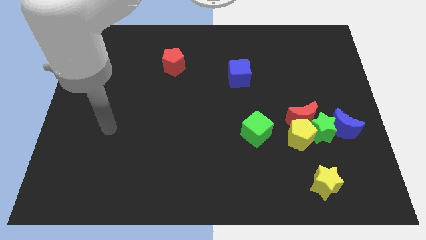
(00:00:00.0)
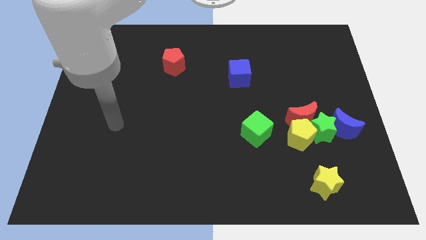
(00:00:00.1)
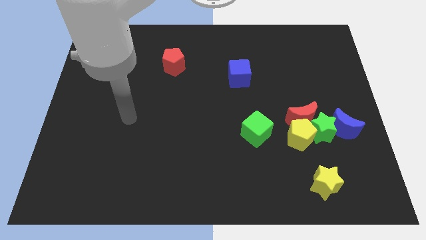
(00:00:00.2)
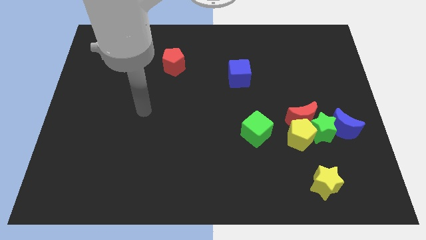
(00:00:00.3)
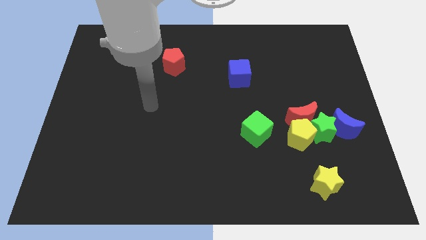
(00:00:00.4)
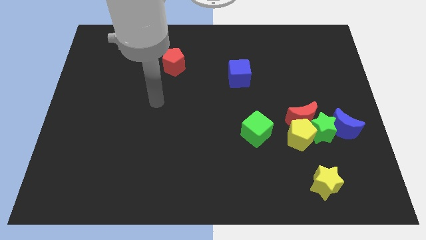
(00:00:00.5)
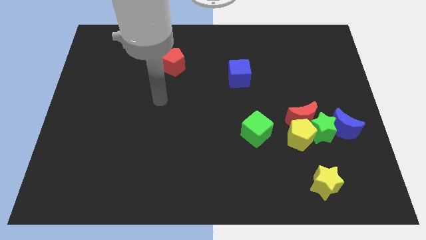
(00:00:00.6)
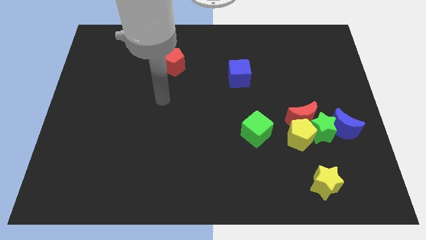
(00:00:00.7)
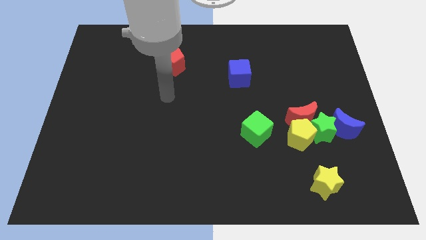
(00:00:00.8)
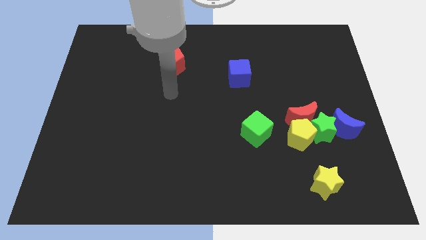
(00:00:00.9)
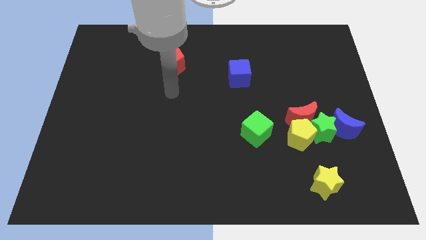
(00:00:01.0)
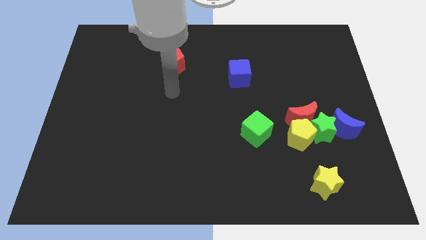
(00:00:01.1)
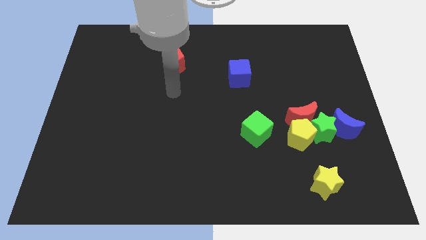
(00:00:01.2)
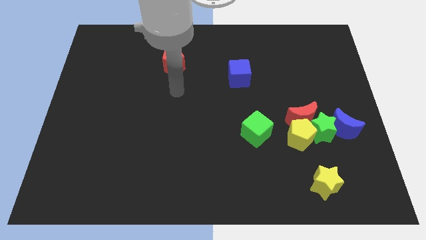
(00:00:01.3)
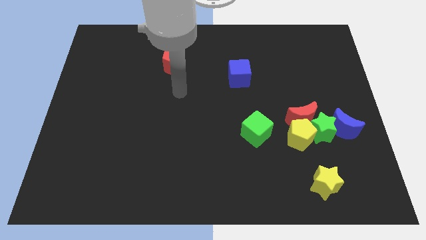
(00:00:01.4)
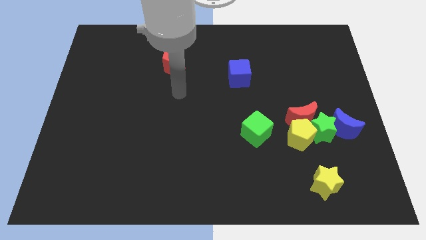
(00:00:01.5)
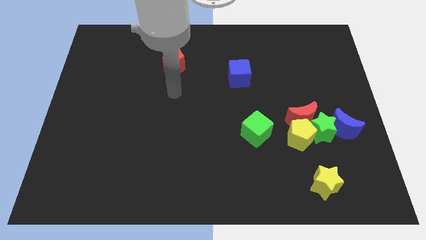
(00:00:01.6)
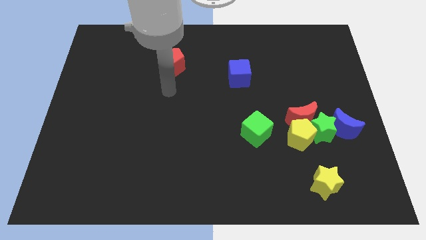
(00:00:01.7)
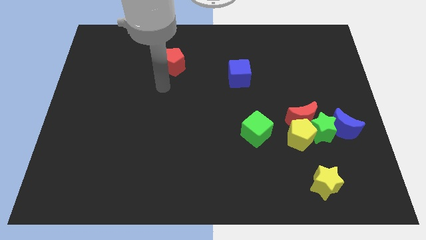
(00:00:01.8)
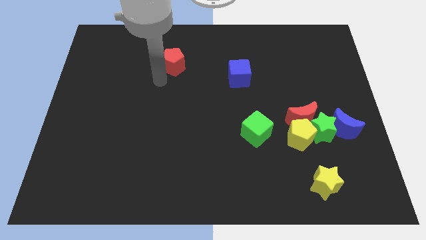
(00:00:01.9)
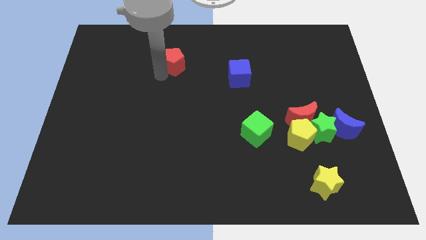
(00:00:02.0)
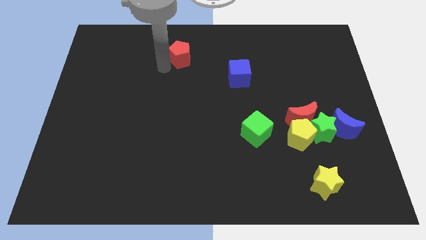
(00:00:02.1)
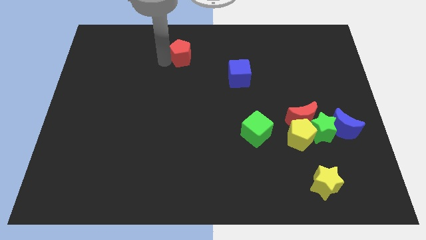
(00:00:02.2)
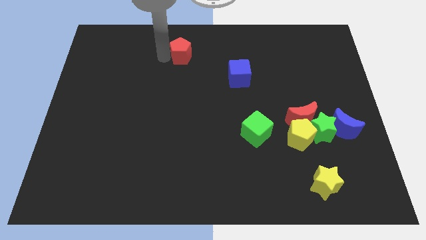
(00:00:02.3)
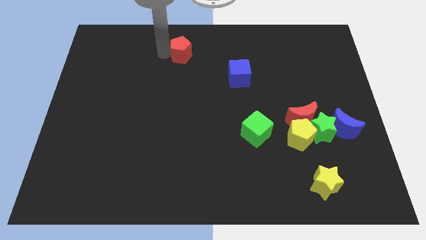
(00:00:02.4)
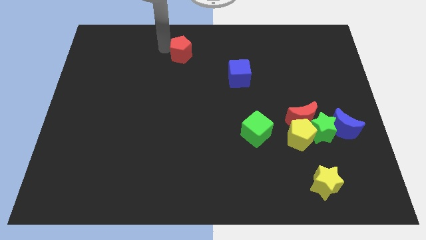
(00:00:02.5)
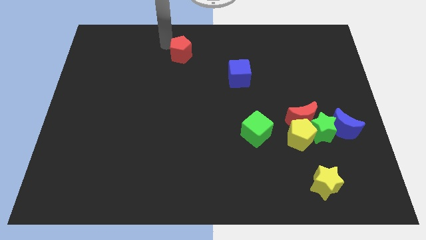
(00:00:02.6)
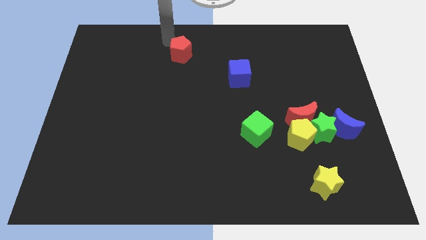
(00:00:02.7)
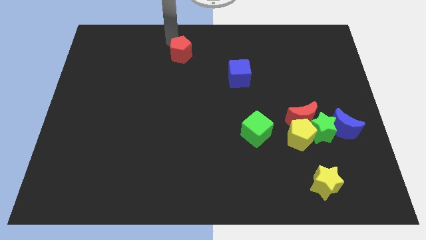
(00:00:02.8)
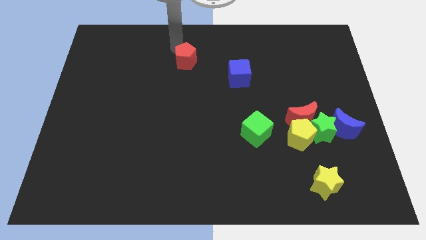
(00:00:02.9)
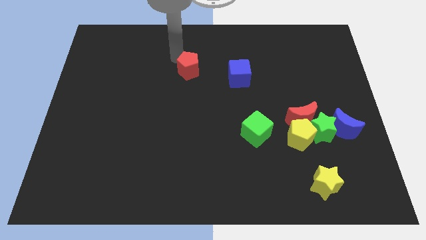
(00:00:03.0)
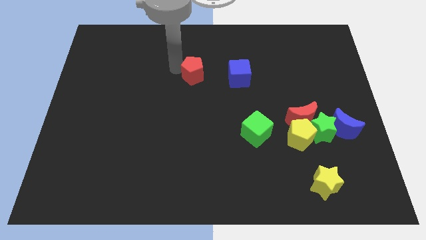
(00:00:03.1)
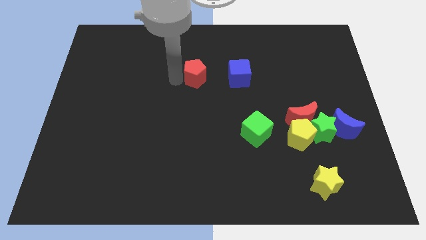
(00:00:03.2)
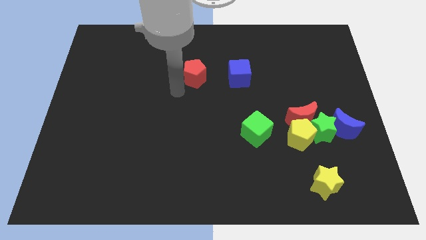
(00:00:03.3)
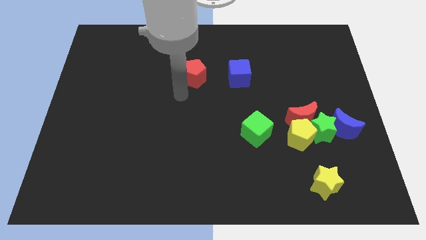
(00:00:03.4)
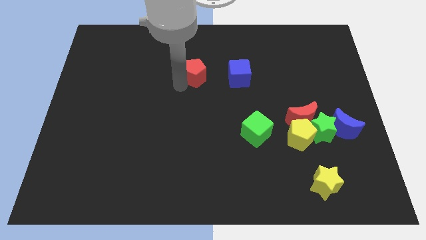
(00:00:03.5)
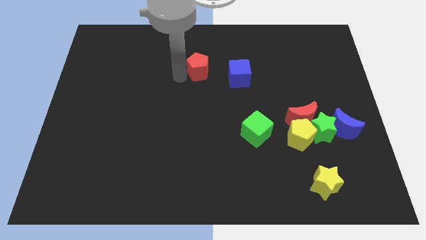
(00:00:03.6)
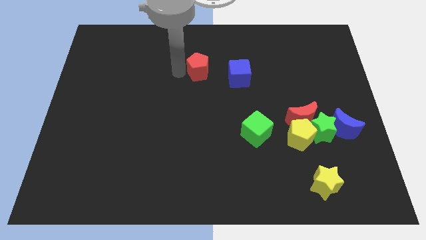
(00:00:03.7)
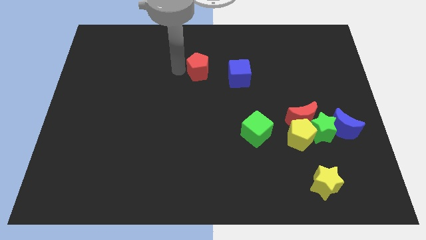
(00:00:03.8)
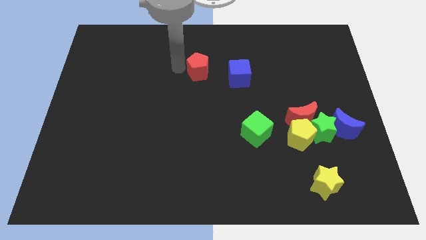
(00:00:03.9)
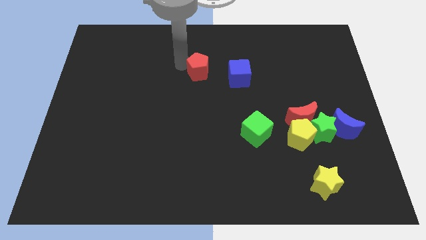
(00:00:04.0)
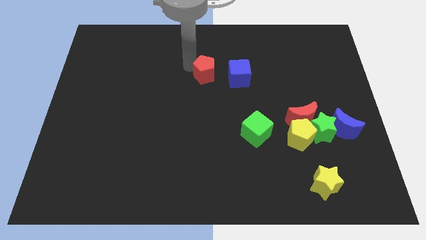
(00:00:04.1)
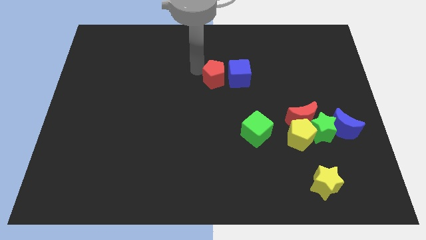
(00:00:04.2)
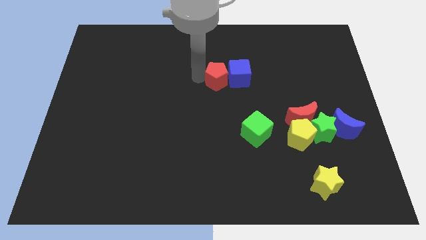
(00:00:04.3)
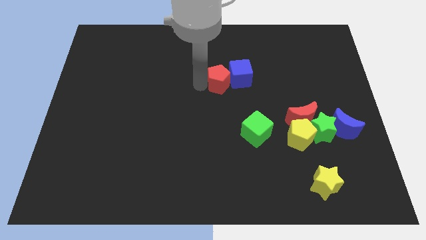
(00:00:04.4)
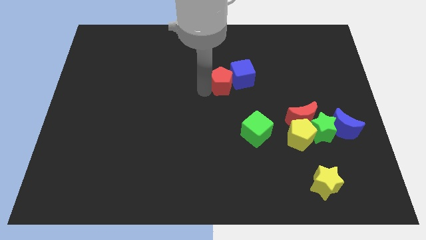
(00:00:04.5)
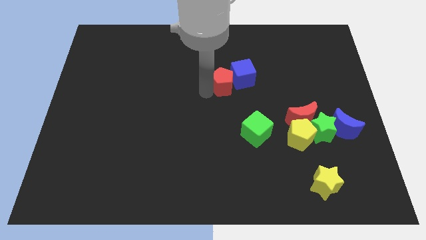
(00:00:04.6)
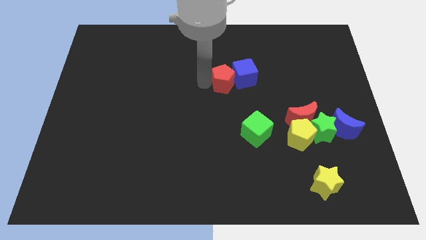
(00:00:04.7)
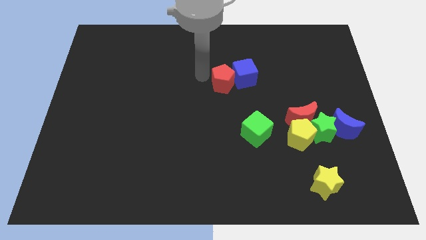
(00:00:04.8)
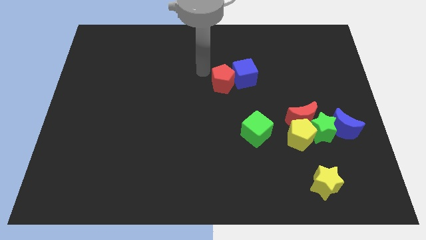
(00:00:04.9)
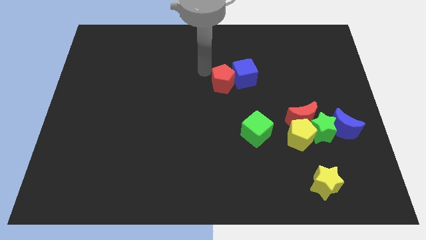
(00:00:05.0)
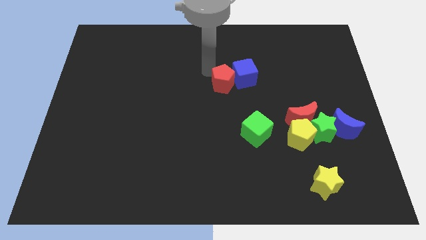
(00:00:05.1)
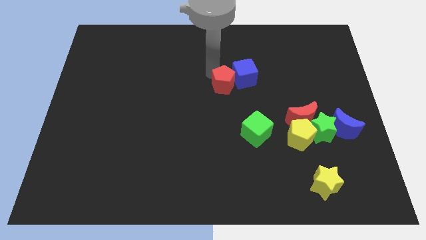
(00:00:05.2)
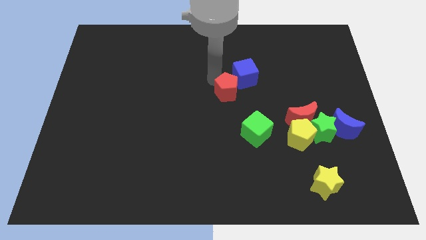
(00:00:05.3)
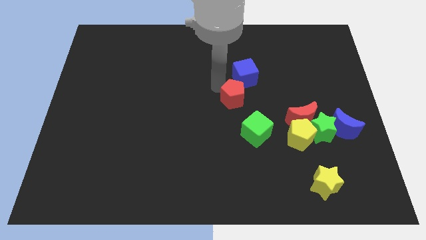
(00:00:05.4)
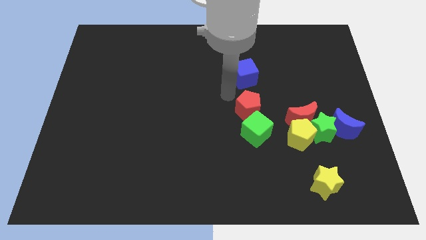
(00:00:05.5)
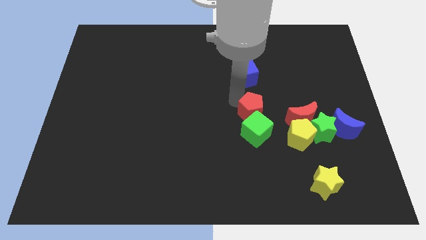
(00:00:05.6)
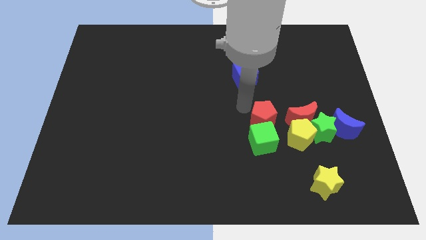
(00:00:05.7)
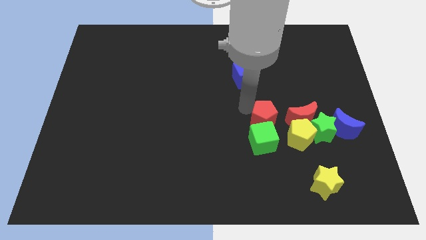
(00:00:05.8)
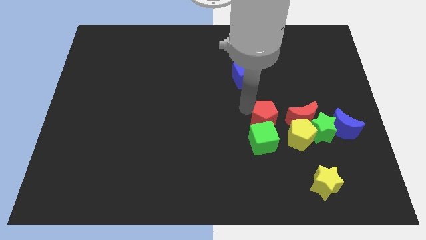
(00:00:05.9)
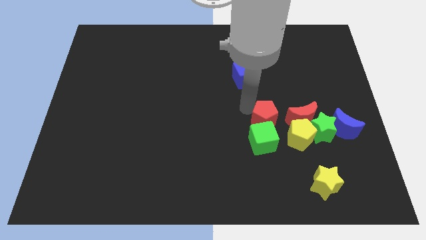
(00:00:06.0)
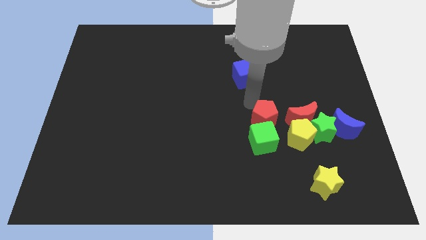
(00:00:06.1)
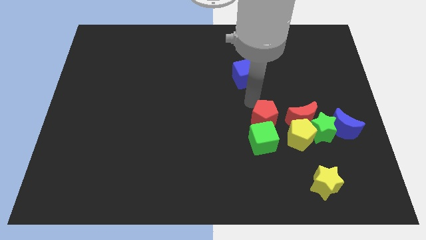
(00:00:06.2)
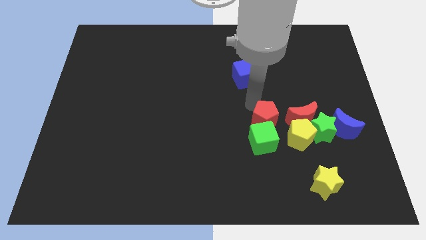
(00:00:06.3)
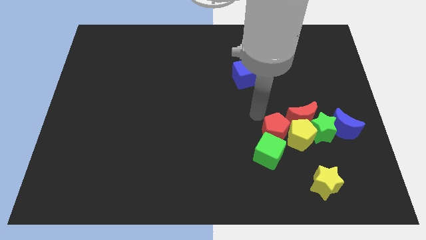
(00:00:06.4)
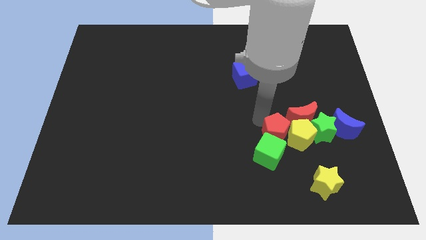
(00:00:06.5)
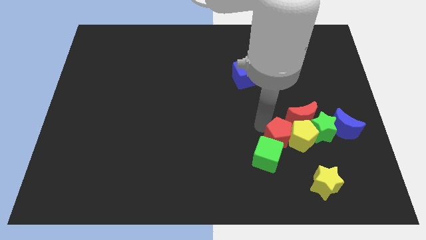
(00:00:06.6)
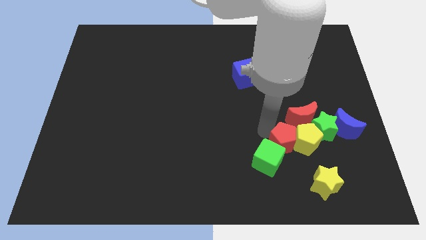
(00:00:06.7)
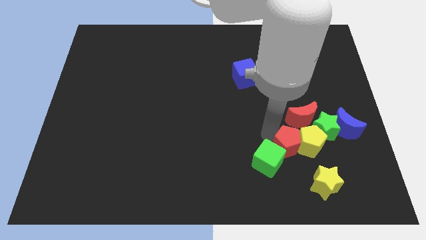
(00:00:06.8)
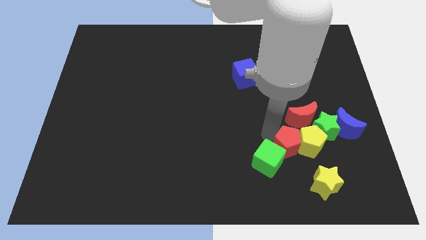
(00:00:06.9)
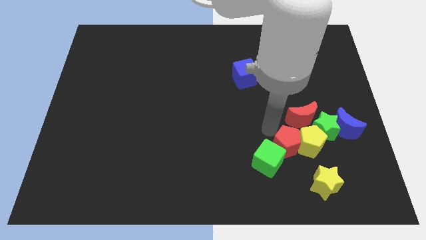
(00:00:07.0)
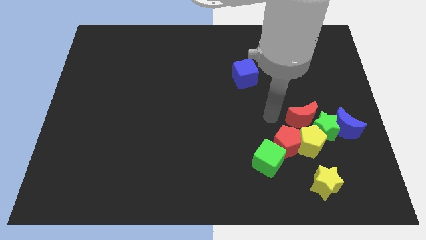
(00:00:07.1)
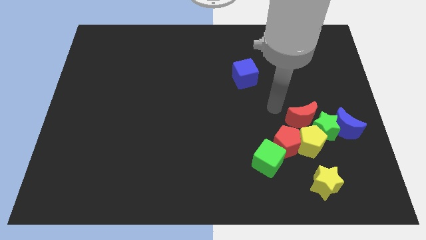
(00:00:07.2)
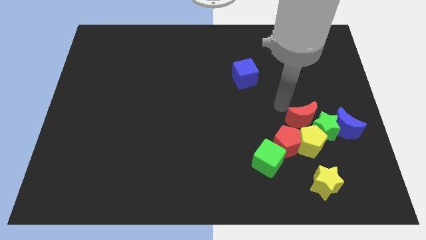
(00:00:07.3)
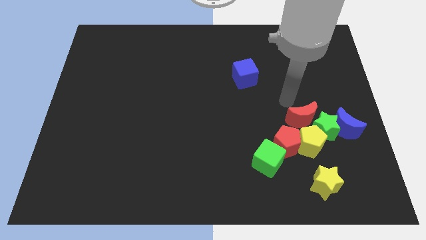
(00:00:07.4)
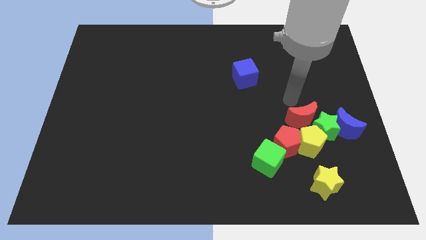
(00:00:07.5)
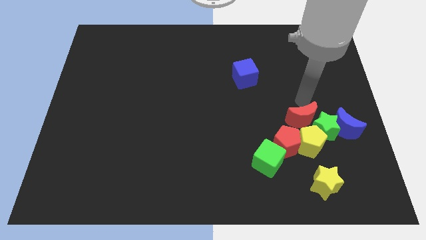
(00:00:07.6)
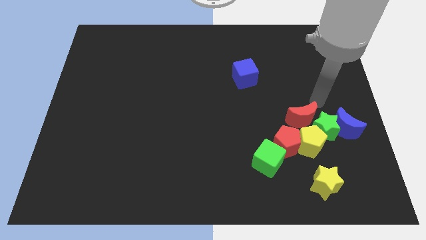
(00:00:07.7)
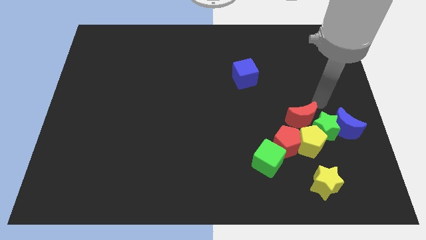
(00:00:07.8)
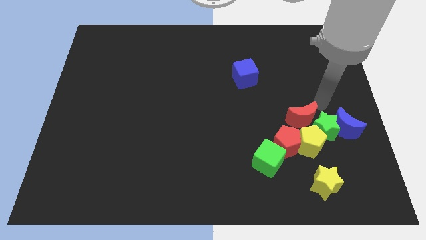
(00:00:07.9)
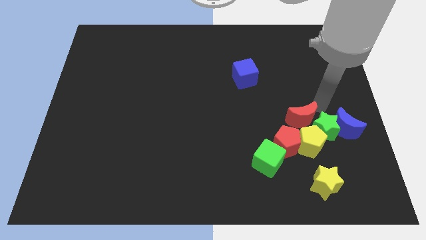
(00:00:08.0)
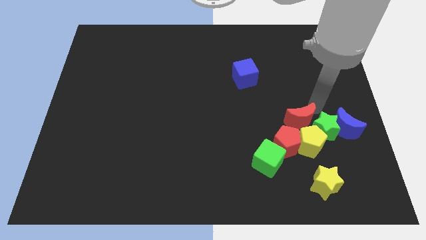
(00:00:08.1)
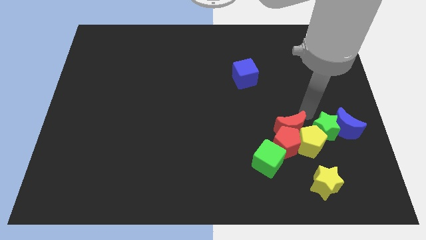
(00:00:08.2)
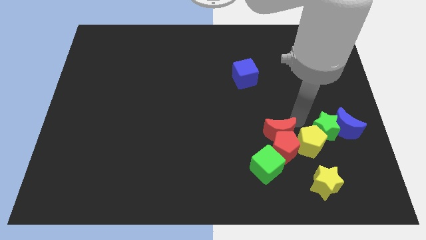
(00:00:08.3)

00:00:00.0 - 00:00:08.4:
move the red pentagon to all the cubes

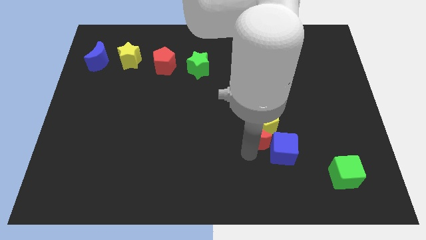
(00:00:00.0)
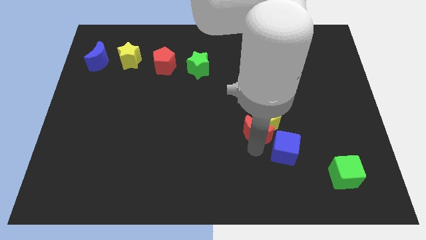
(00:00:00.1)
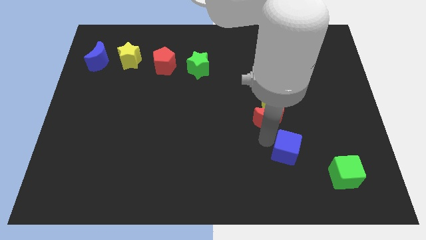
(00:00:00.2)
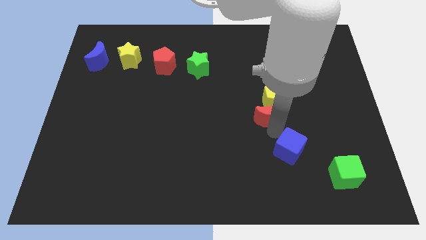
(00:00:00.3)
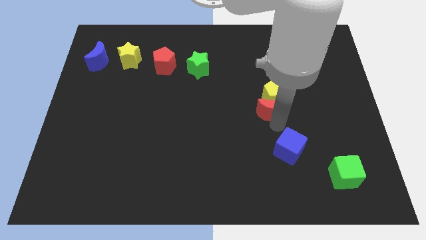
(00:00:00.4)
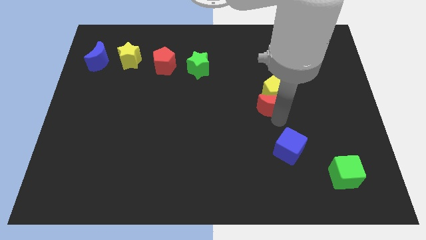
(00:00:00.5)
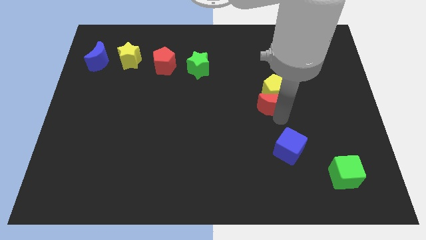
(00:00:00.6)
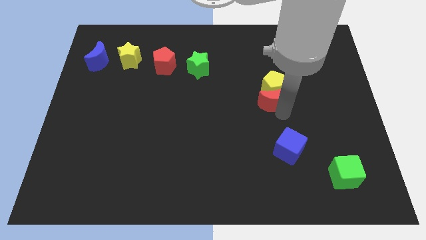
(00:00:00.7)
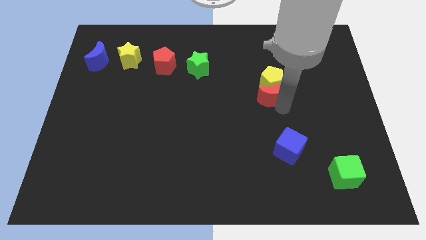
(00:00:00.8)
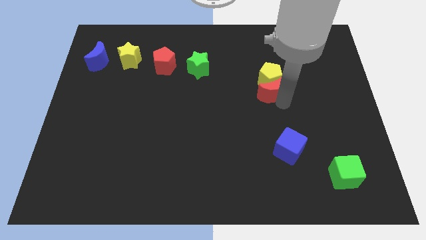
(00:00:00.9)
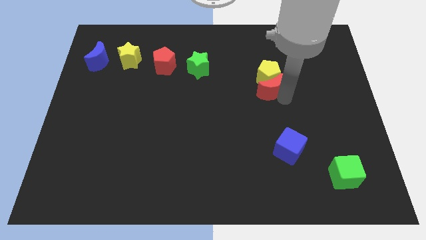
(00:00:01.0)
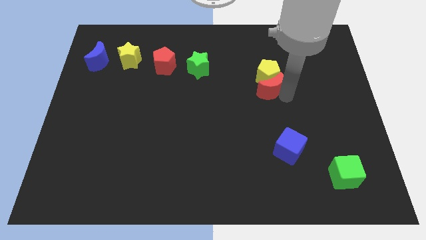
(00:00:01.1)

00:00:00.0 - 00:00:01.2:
slide the yellow pentagon and red moon towards the green star
